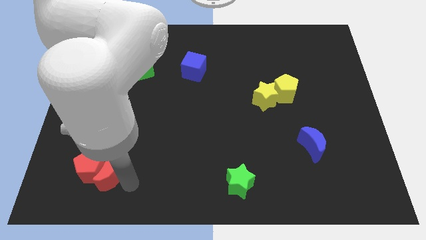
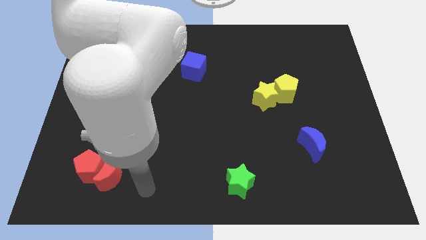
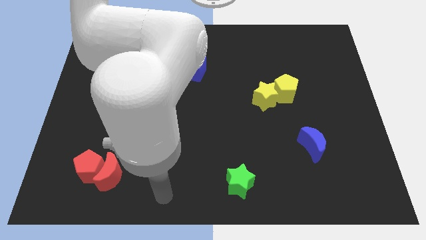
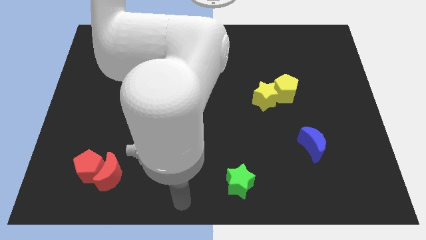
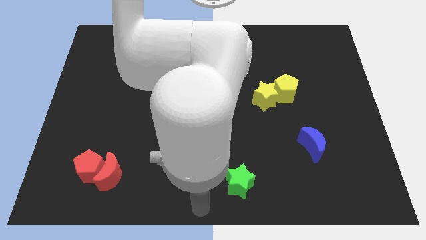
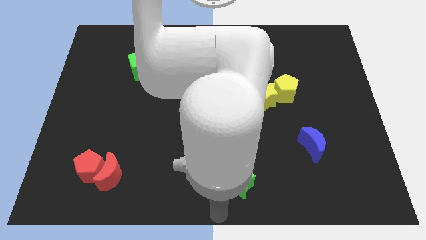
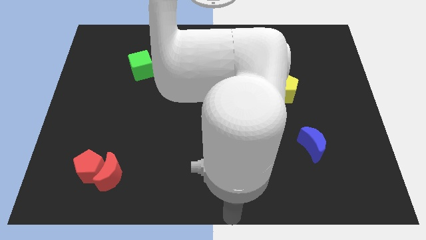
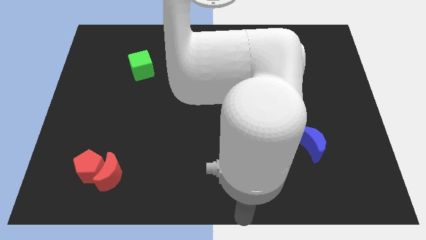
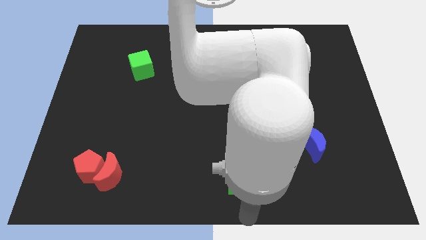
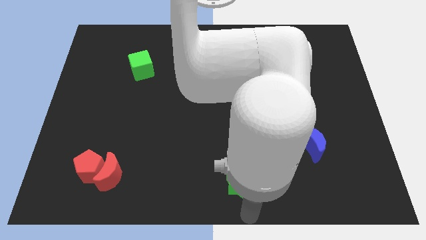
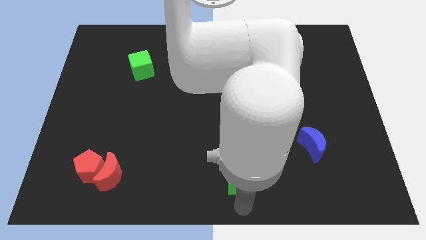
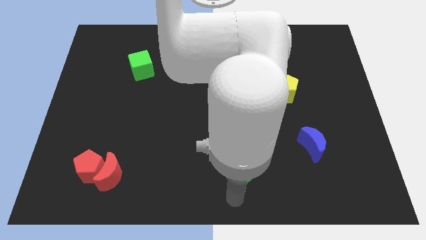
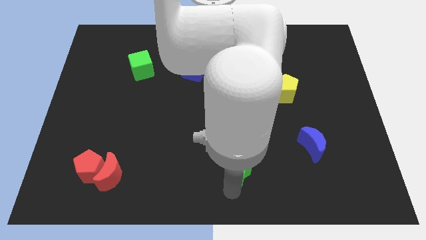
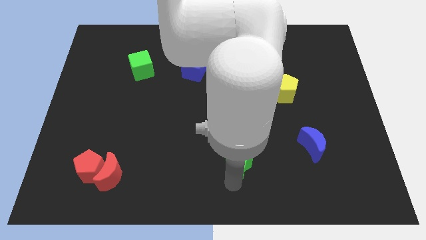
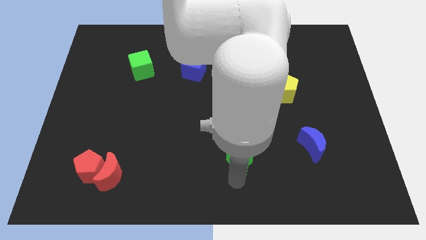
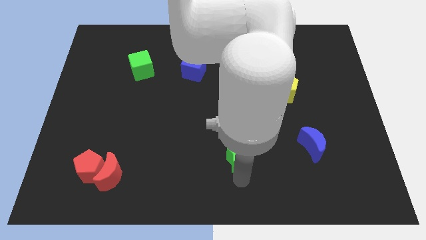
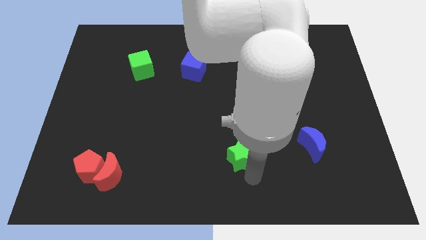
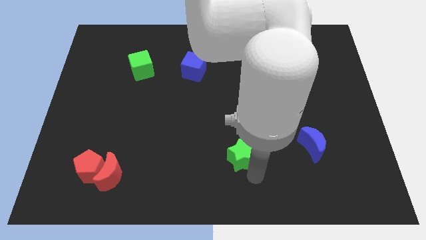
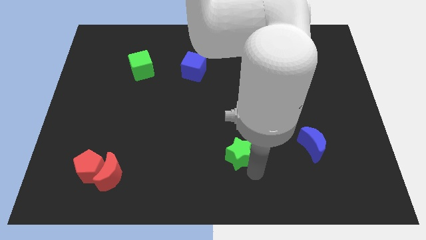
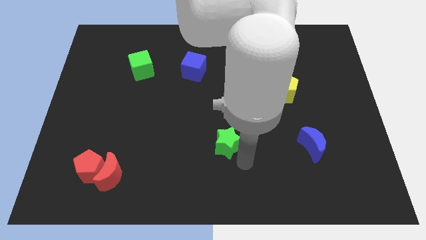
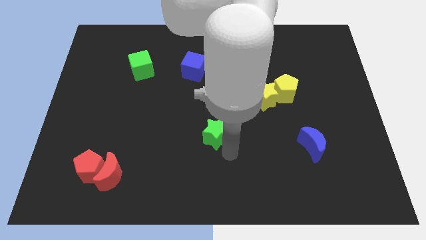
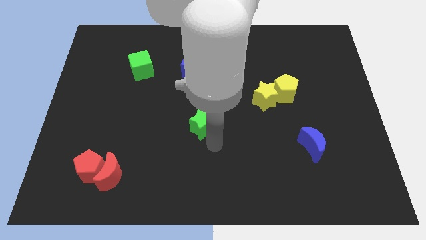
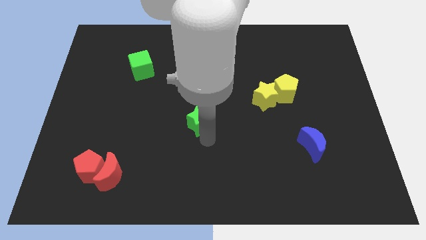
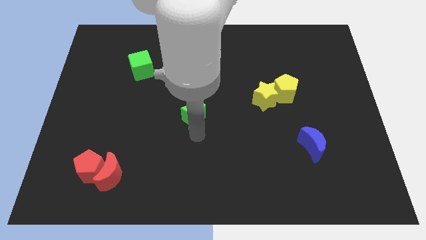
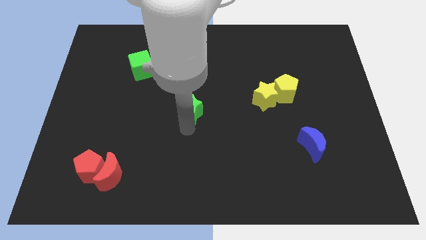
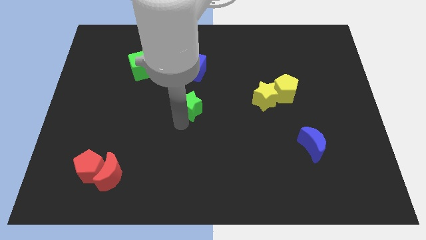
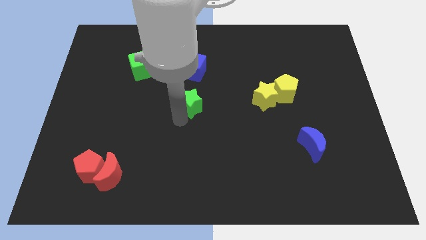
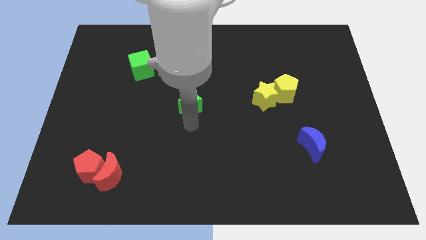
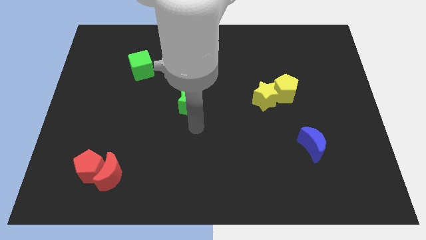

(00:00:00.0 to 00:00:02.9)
push the green star towards the center of the board

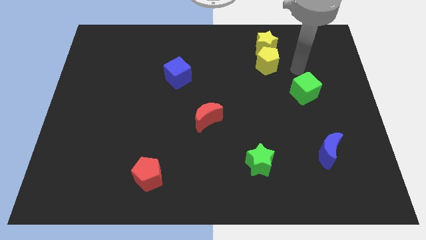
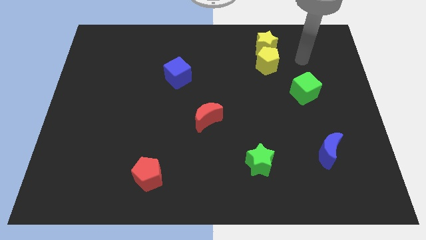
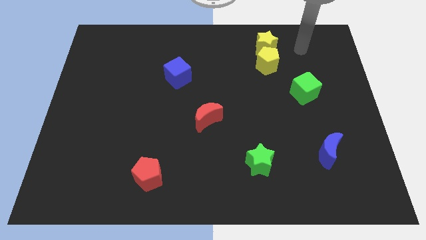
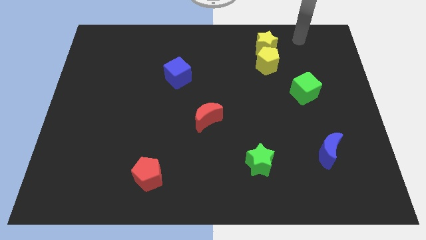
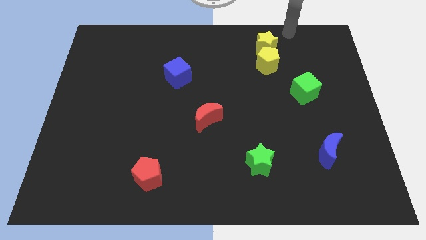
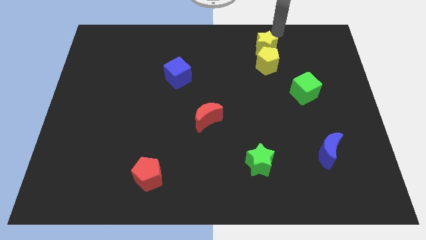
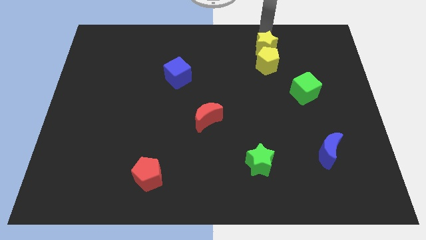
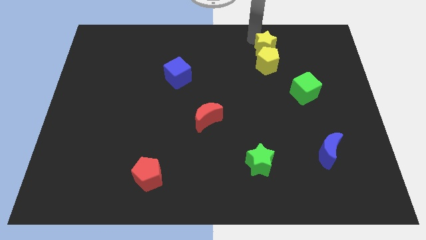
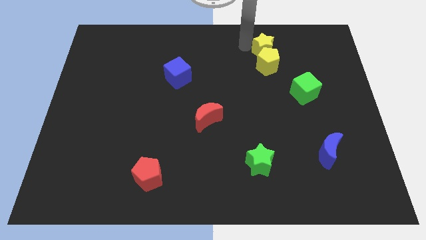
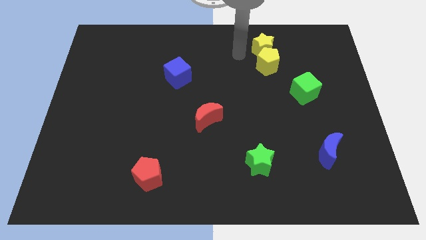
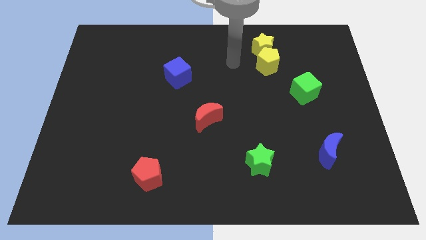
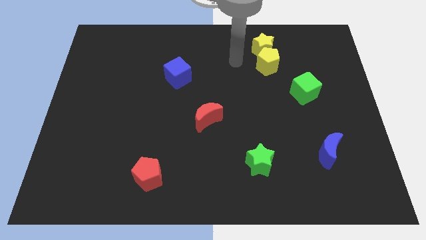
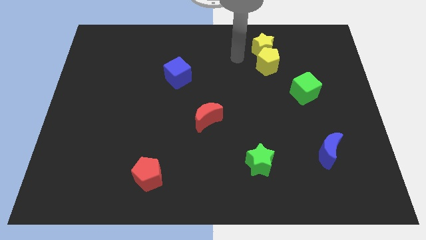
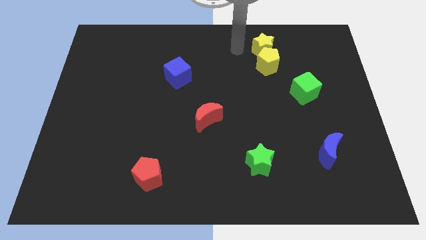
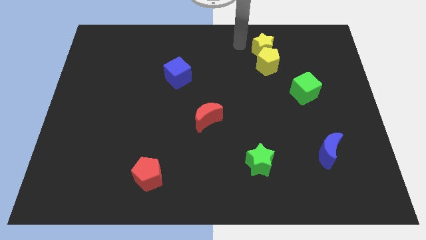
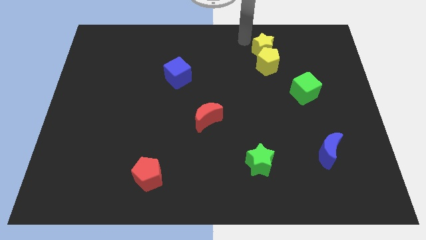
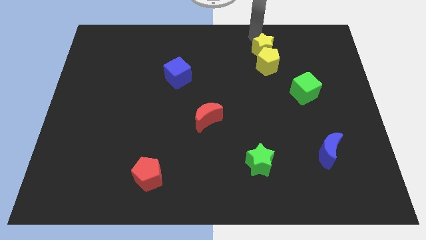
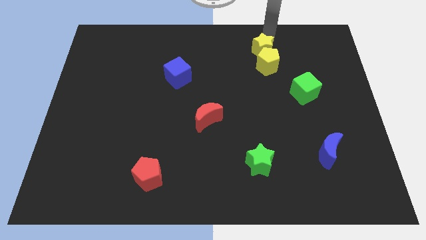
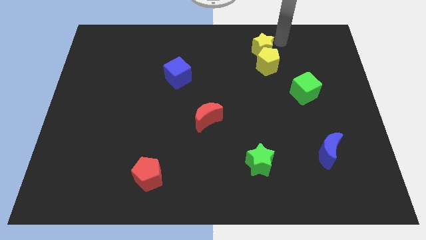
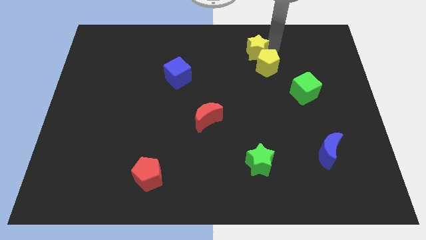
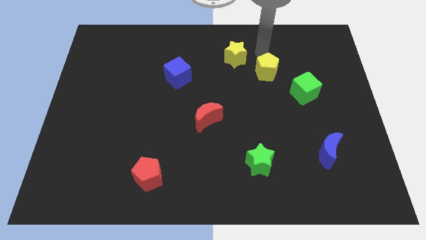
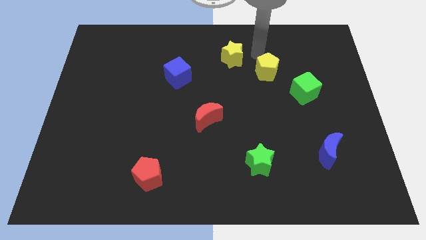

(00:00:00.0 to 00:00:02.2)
move yellow star slightly left

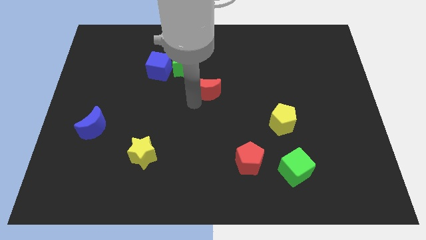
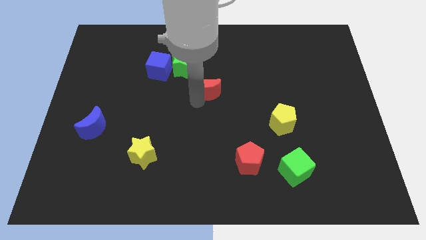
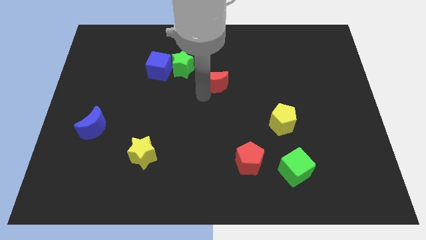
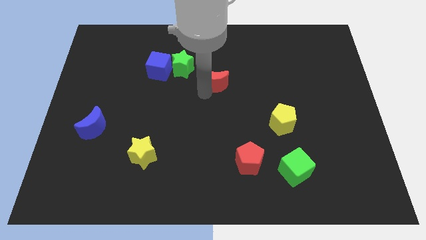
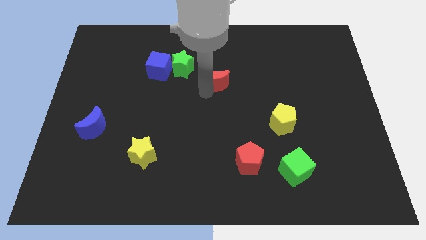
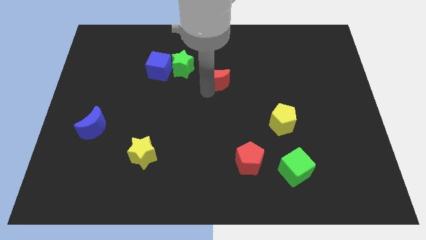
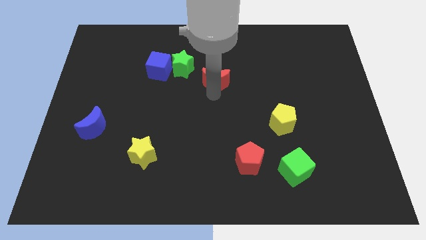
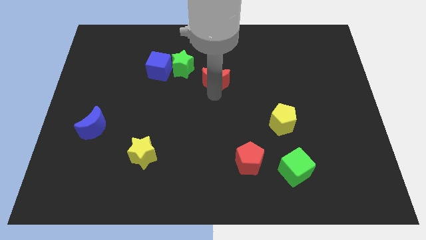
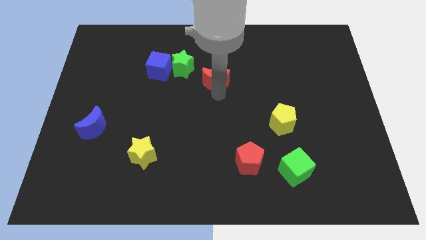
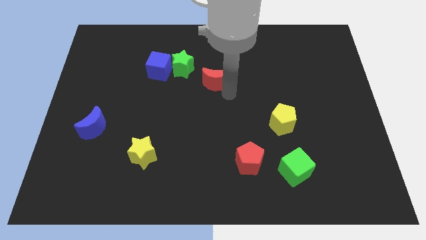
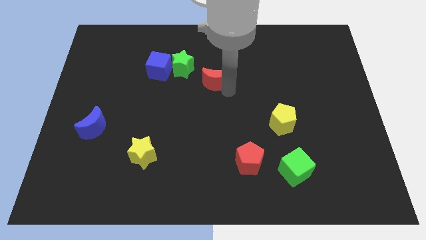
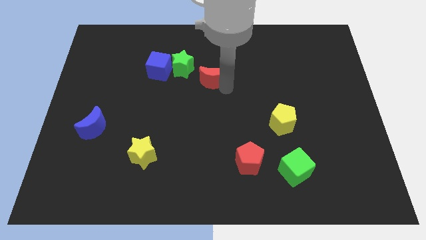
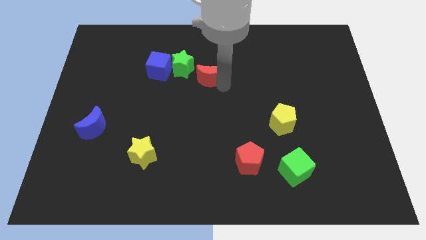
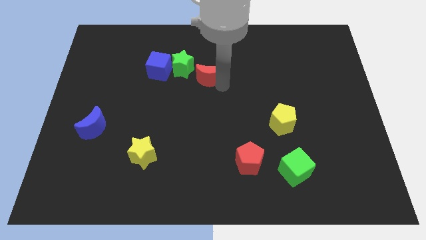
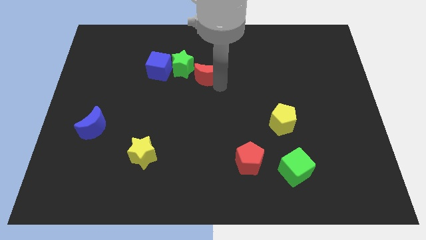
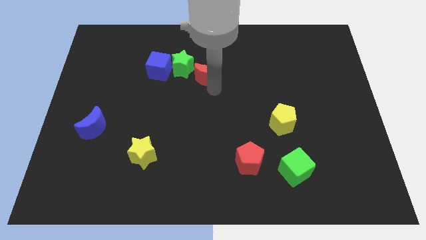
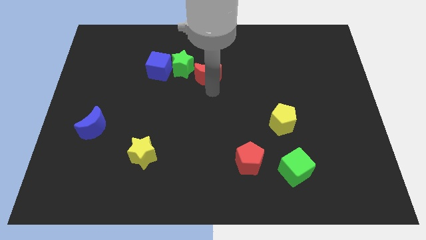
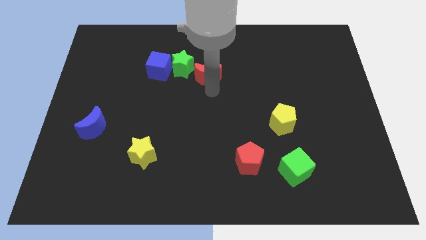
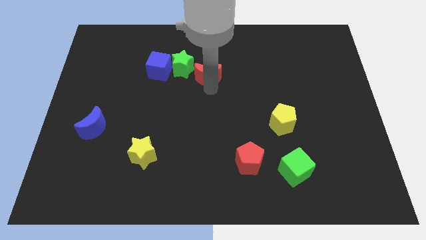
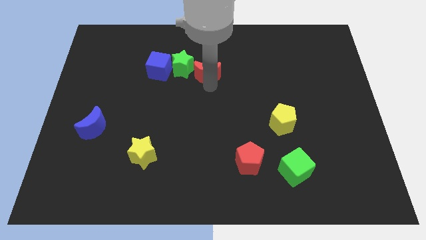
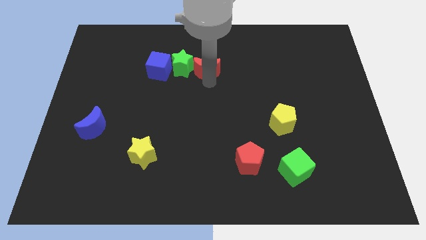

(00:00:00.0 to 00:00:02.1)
place the red moon to the right of the green star

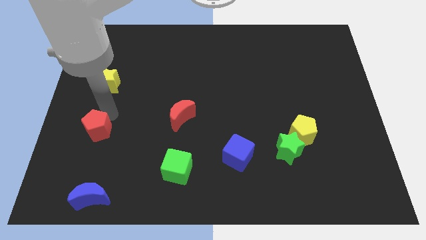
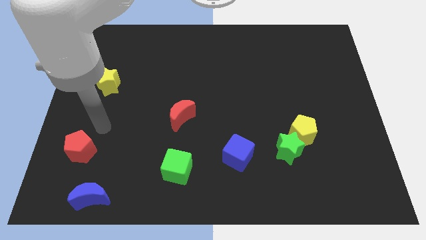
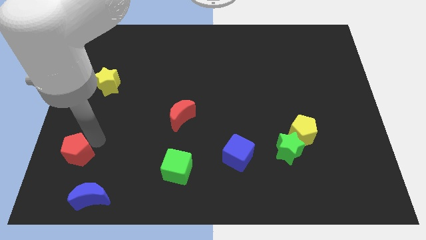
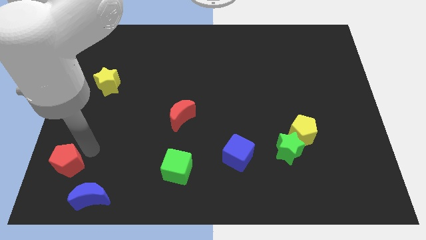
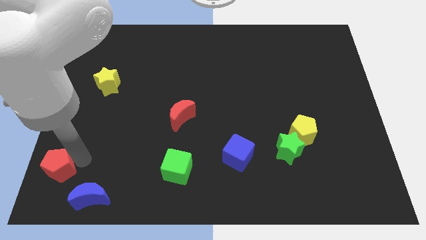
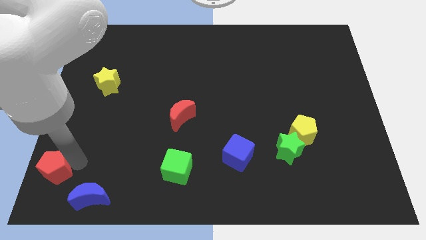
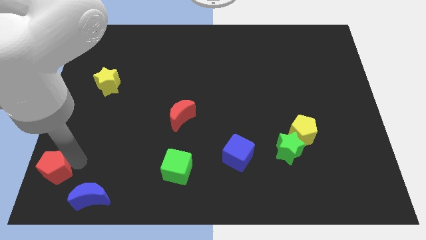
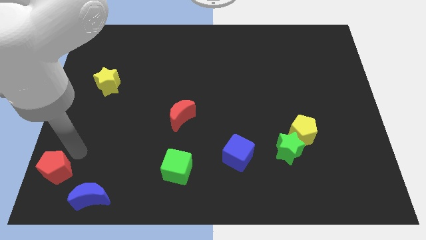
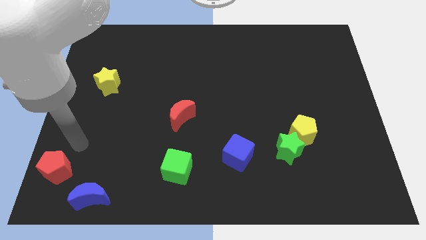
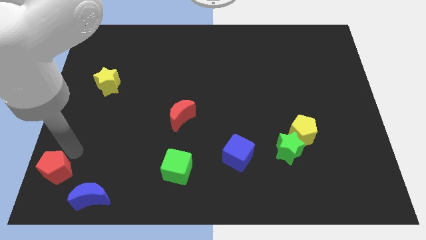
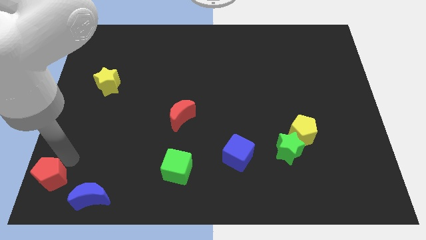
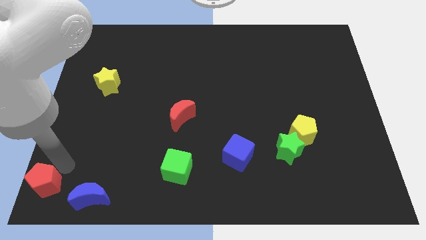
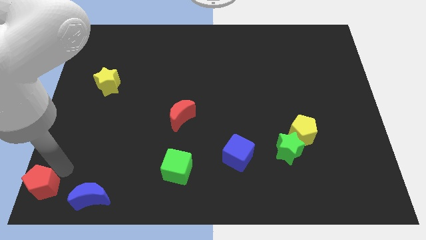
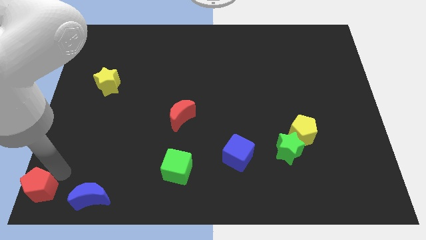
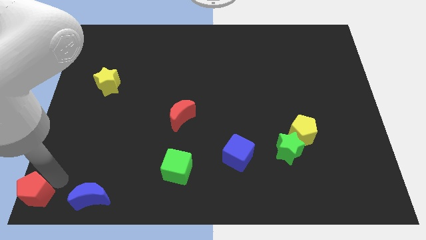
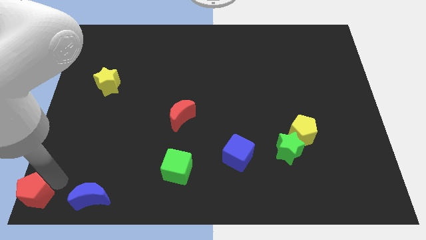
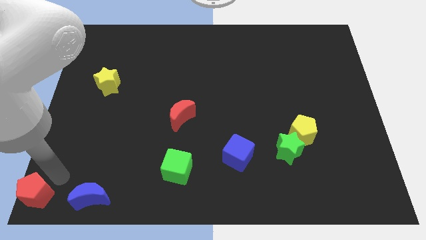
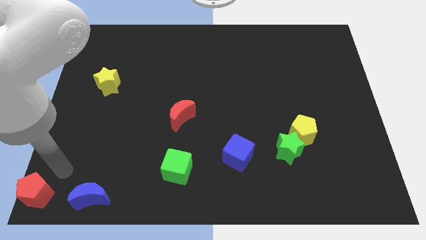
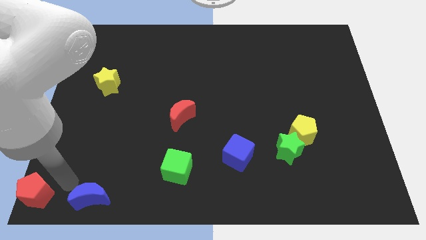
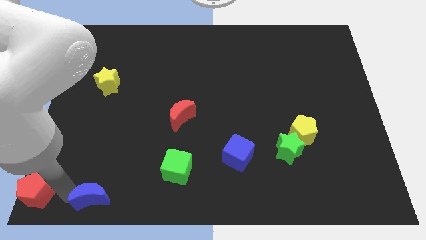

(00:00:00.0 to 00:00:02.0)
push the red pentagon to the bottom left corner of the board
